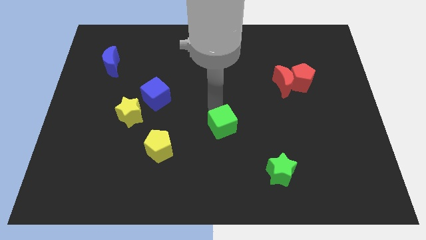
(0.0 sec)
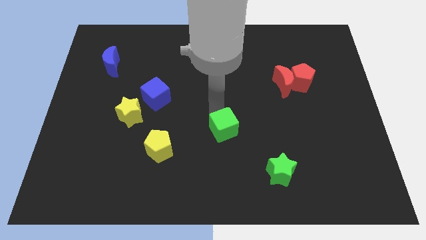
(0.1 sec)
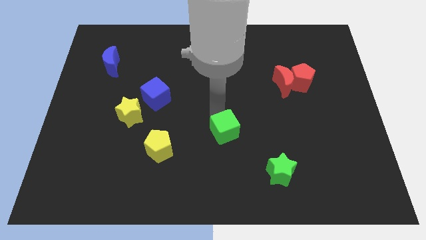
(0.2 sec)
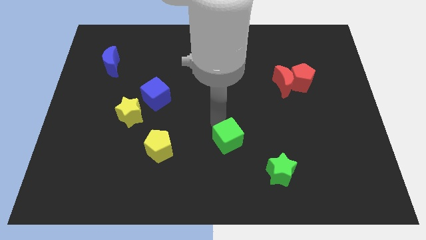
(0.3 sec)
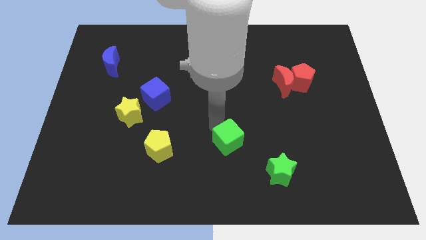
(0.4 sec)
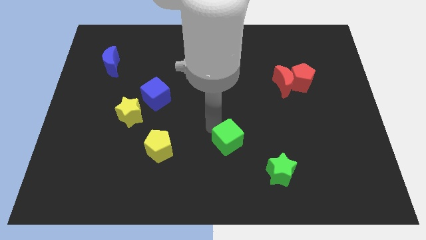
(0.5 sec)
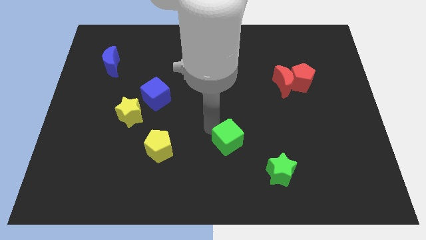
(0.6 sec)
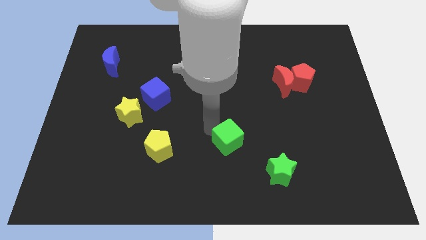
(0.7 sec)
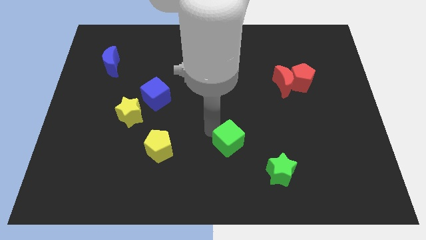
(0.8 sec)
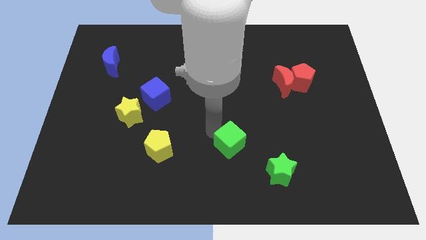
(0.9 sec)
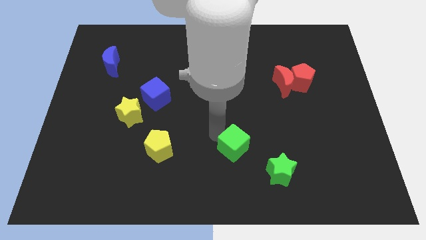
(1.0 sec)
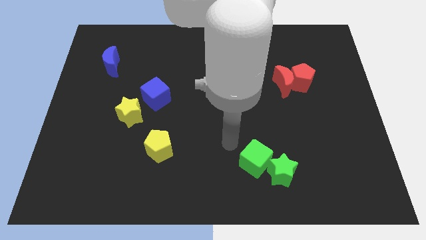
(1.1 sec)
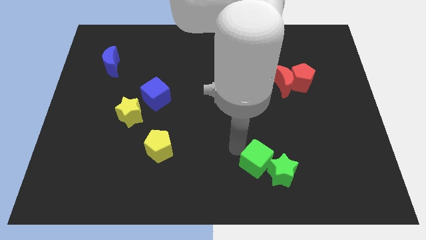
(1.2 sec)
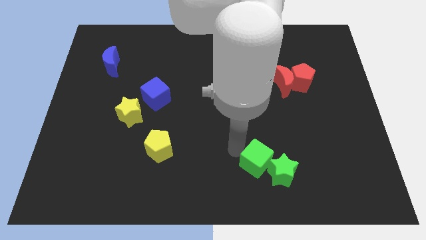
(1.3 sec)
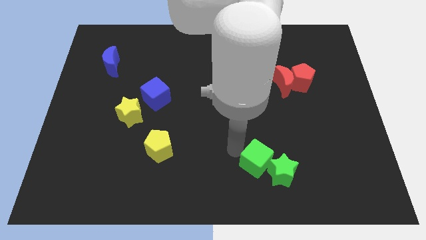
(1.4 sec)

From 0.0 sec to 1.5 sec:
push the green cube into the green star

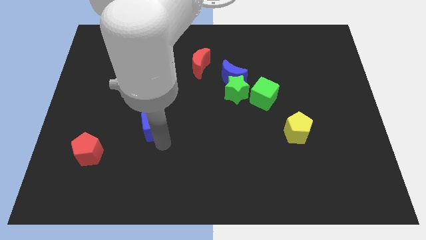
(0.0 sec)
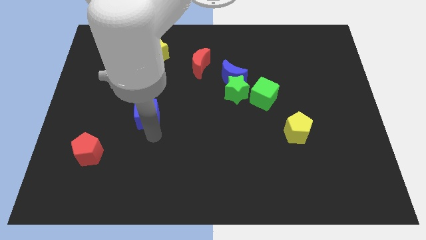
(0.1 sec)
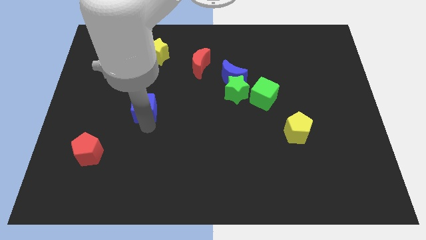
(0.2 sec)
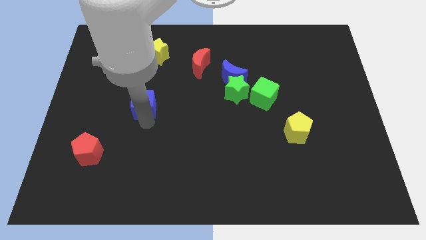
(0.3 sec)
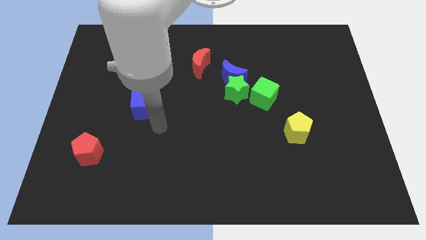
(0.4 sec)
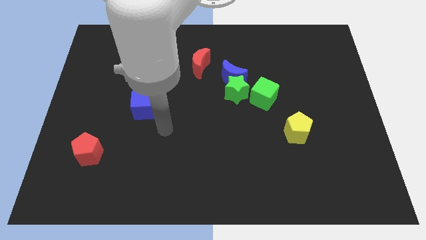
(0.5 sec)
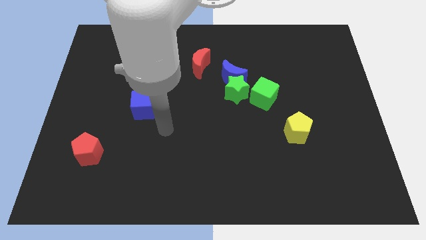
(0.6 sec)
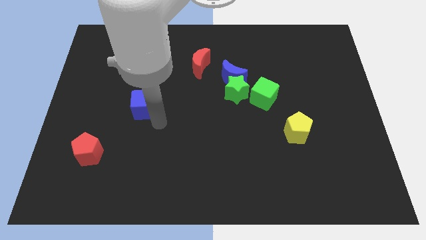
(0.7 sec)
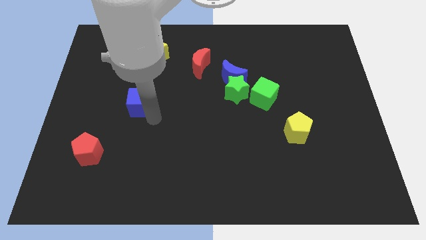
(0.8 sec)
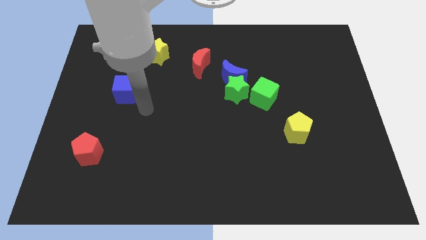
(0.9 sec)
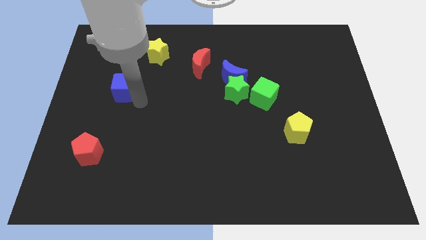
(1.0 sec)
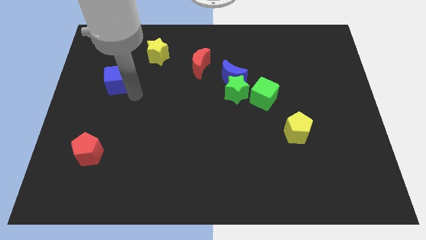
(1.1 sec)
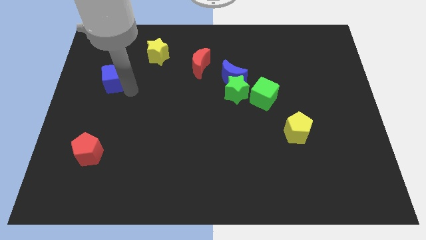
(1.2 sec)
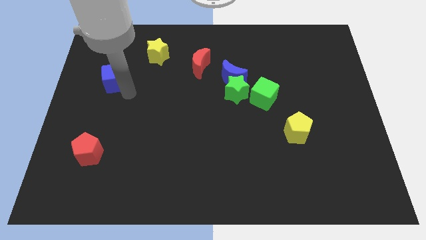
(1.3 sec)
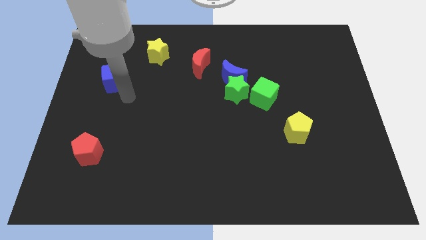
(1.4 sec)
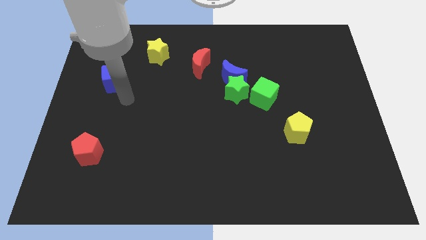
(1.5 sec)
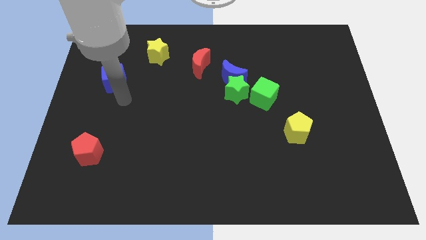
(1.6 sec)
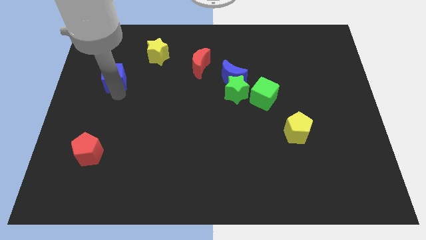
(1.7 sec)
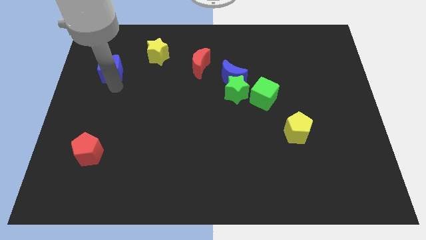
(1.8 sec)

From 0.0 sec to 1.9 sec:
slide the blue cube towards the top left

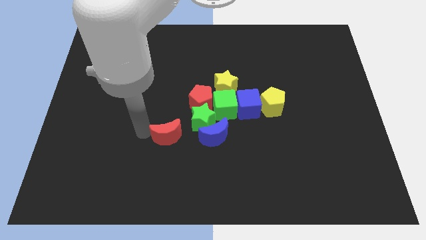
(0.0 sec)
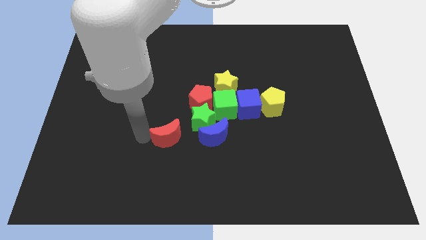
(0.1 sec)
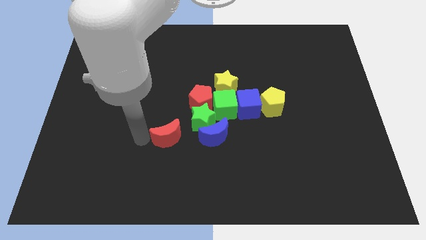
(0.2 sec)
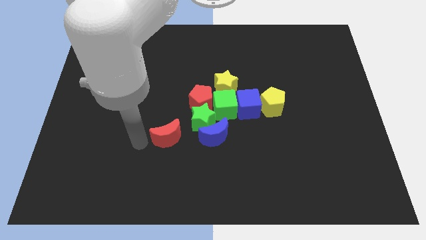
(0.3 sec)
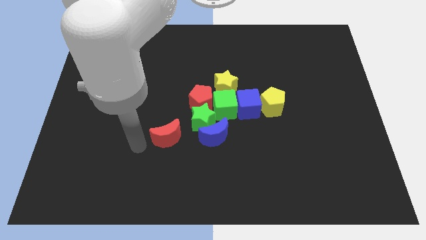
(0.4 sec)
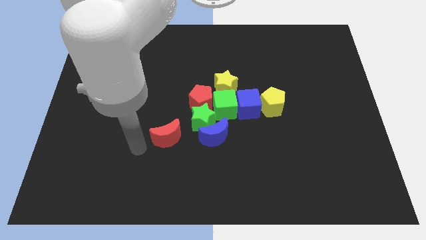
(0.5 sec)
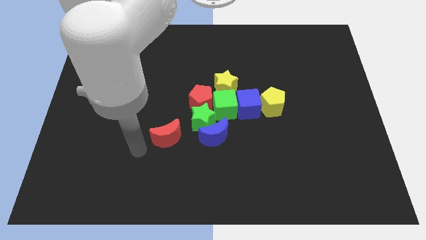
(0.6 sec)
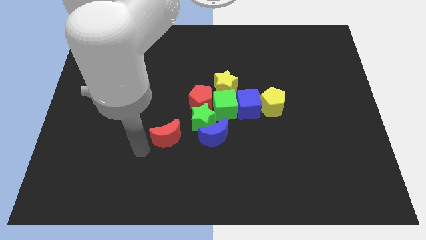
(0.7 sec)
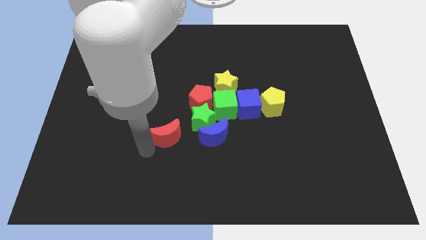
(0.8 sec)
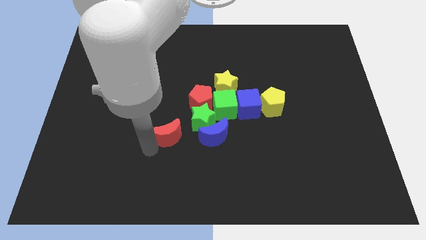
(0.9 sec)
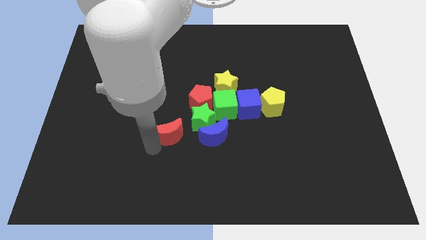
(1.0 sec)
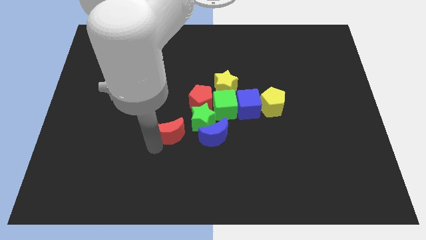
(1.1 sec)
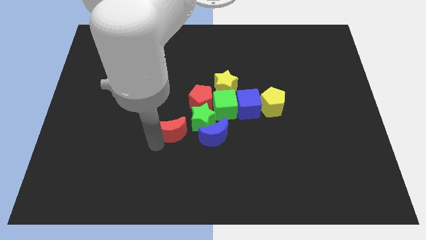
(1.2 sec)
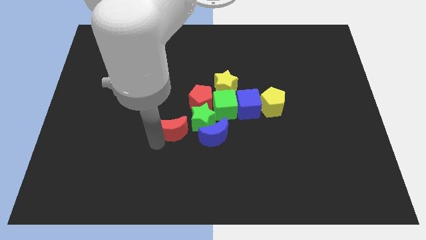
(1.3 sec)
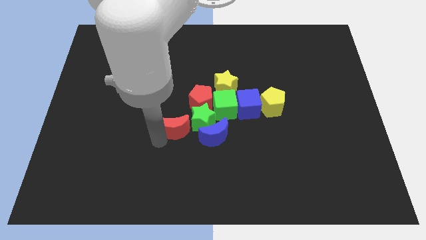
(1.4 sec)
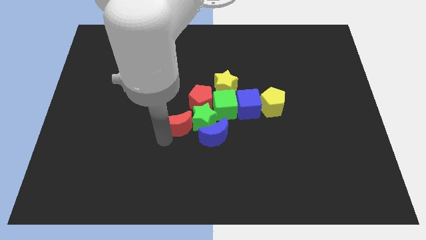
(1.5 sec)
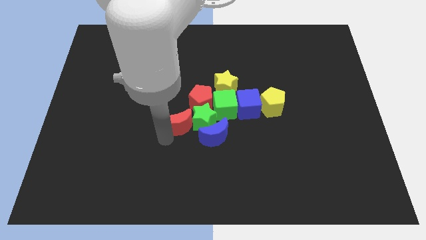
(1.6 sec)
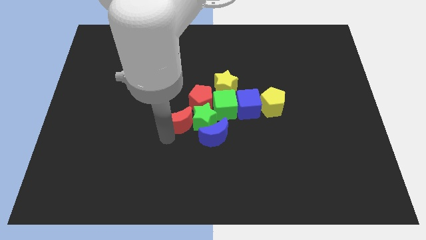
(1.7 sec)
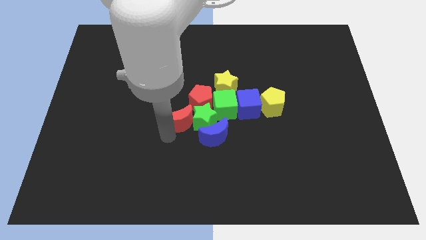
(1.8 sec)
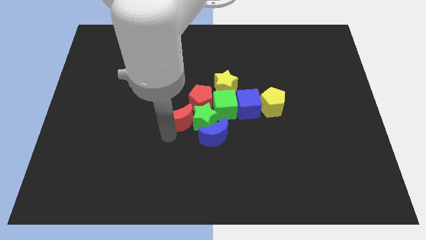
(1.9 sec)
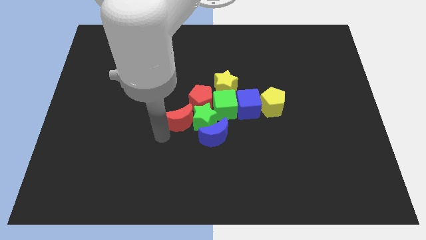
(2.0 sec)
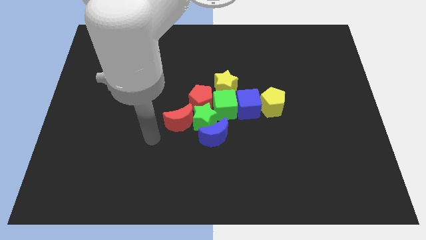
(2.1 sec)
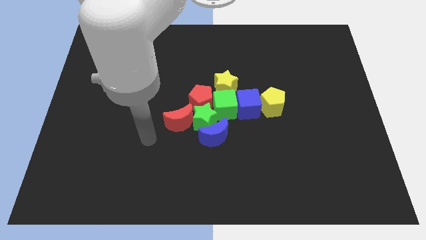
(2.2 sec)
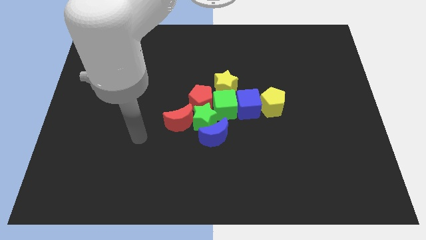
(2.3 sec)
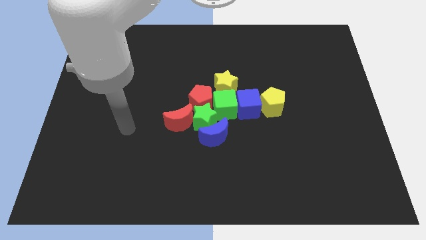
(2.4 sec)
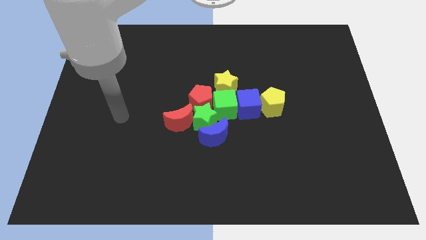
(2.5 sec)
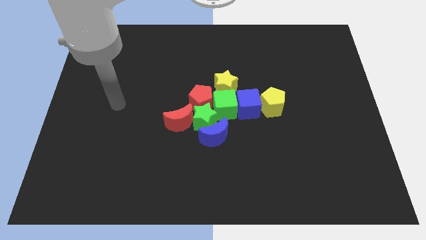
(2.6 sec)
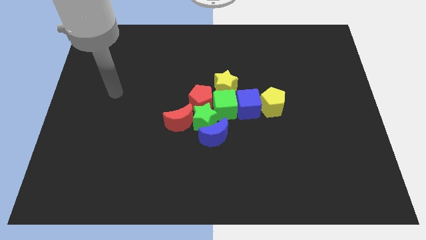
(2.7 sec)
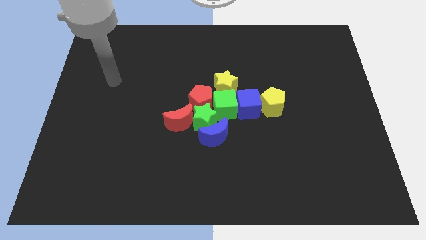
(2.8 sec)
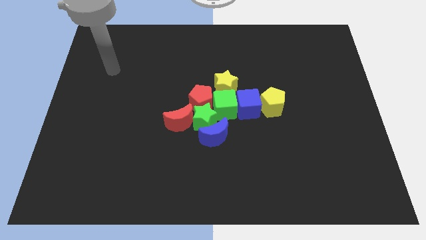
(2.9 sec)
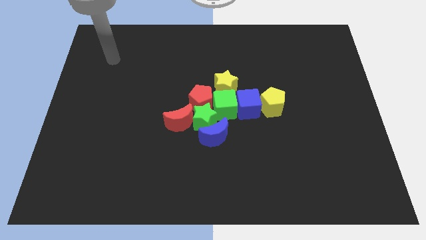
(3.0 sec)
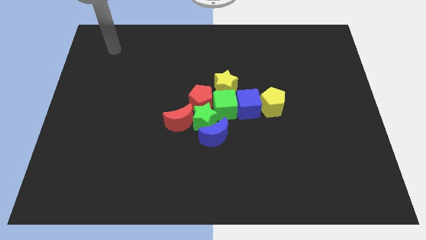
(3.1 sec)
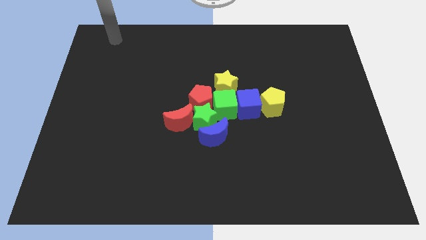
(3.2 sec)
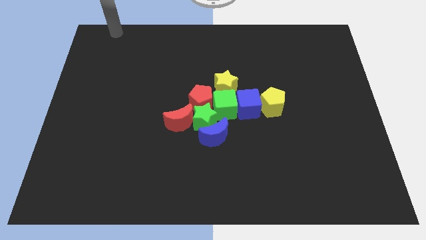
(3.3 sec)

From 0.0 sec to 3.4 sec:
move the red crescent into the green star

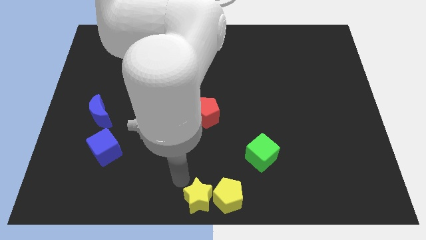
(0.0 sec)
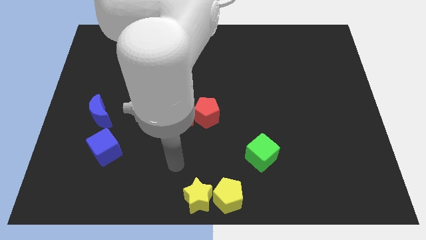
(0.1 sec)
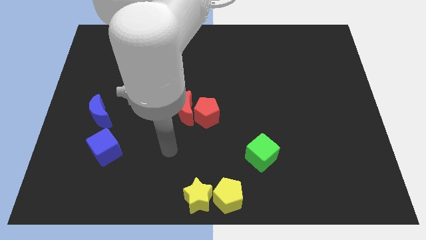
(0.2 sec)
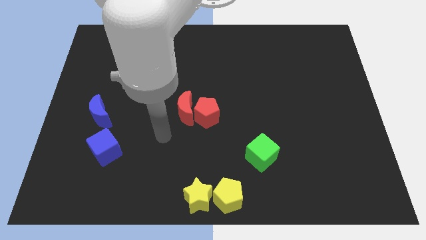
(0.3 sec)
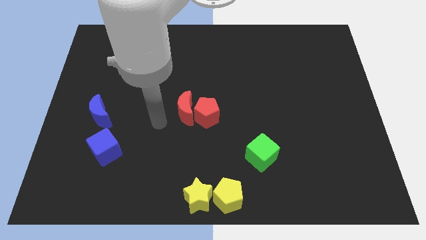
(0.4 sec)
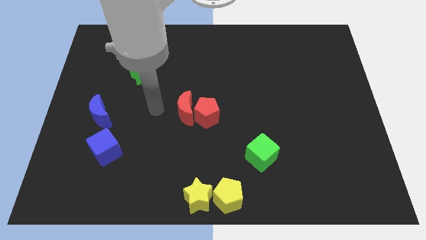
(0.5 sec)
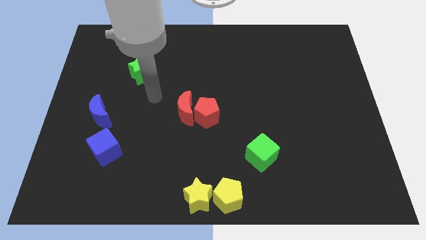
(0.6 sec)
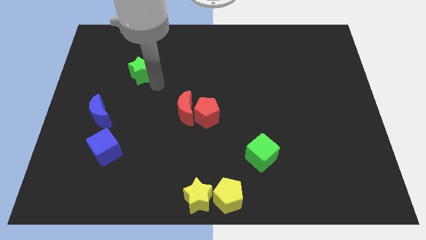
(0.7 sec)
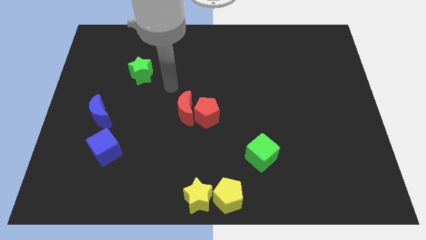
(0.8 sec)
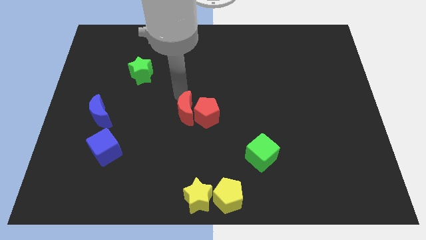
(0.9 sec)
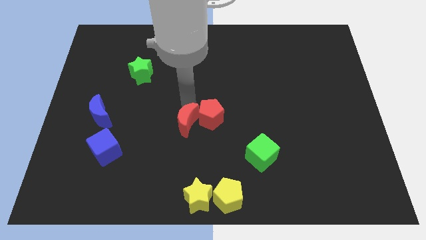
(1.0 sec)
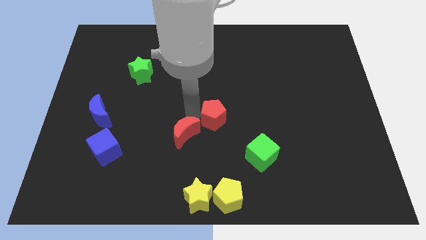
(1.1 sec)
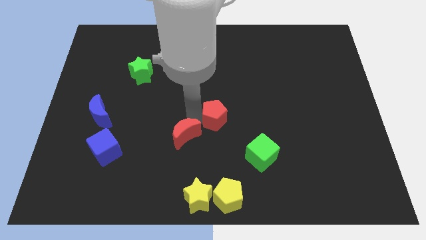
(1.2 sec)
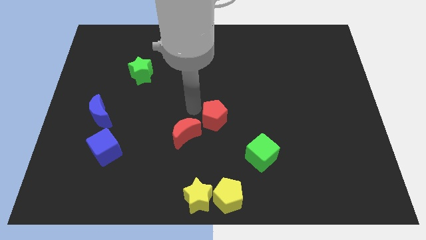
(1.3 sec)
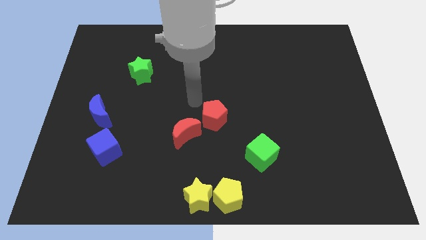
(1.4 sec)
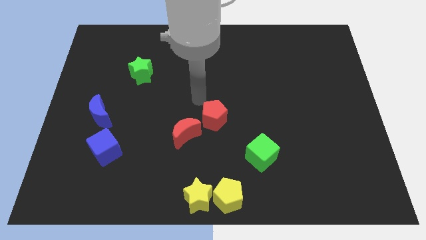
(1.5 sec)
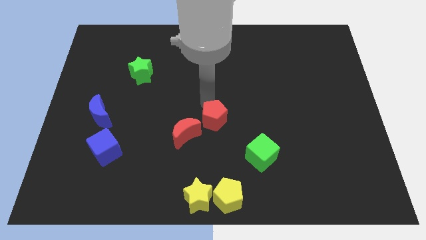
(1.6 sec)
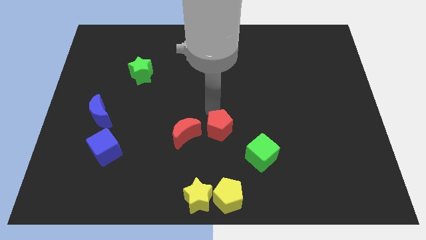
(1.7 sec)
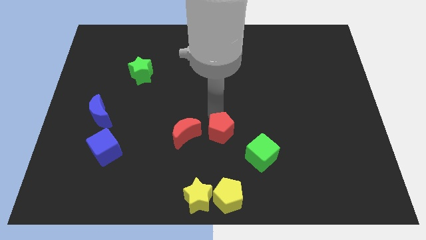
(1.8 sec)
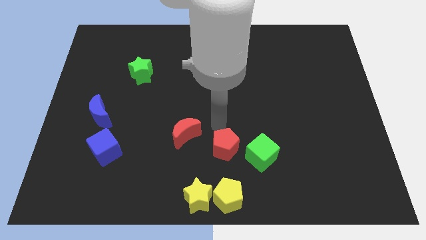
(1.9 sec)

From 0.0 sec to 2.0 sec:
move both the red blocks horizontal to each other
